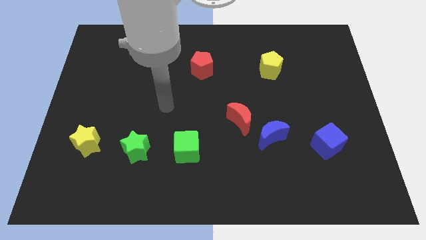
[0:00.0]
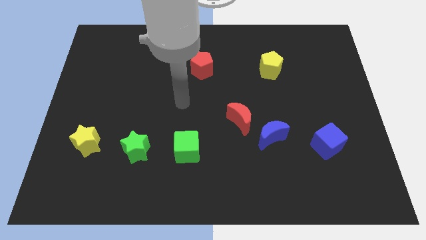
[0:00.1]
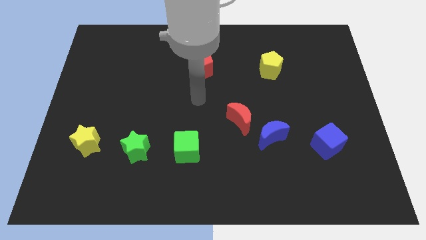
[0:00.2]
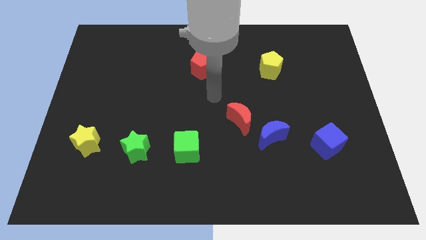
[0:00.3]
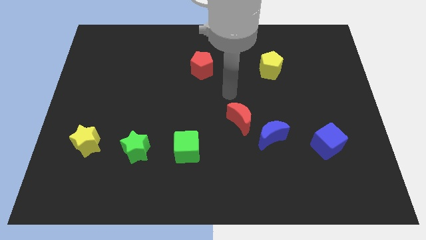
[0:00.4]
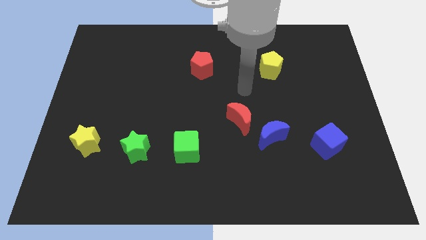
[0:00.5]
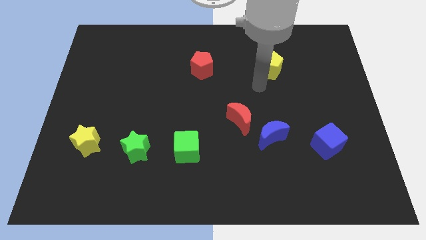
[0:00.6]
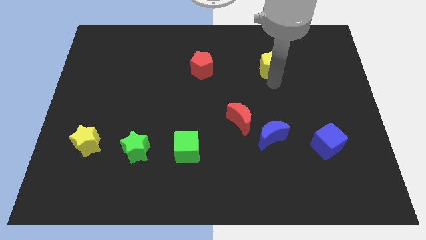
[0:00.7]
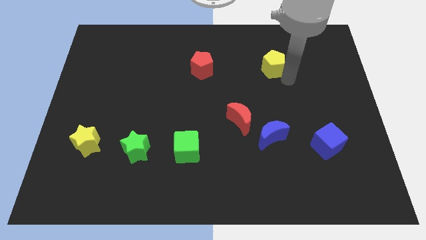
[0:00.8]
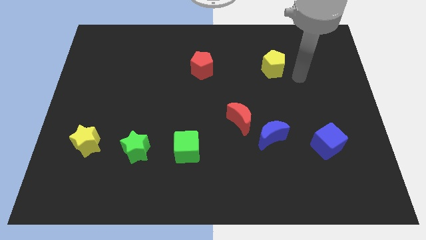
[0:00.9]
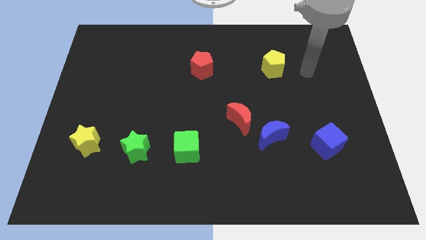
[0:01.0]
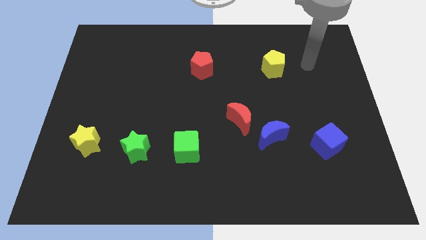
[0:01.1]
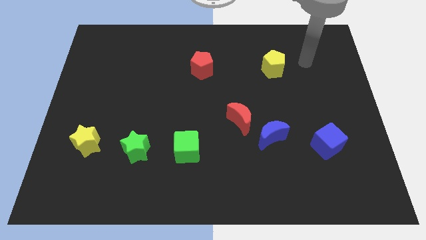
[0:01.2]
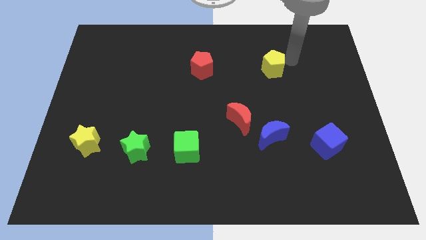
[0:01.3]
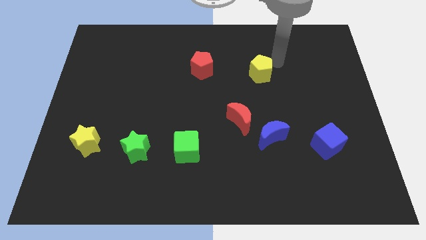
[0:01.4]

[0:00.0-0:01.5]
slightly touch the yellow pentagon

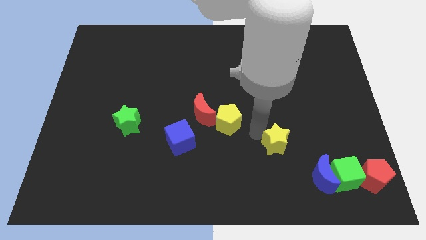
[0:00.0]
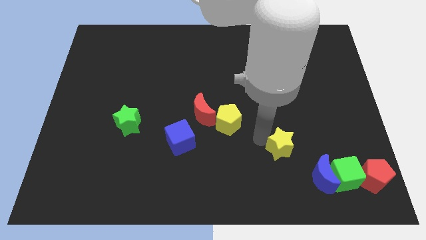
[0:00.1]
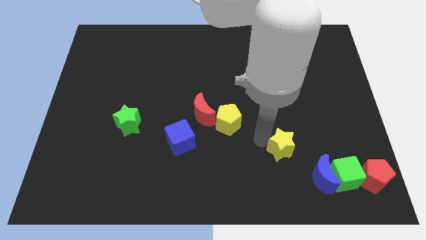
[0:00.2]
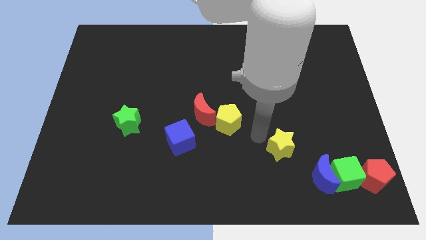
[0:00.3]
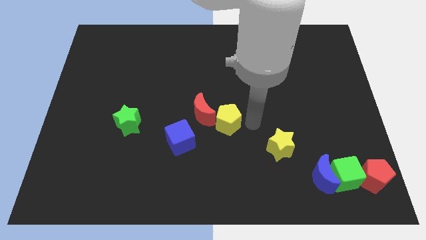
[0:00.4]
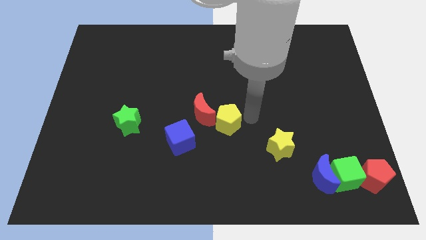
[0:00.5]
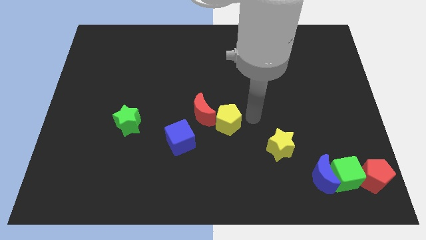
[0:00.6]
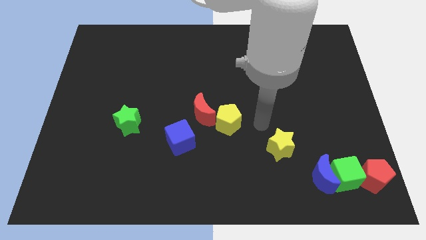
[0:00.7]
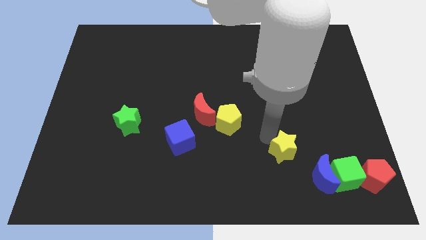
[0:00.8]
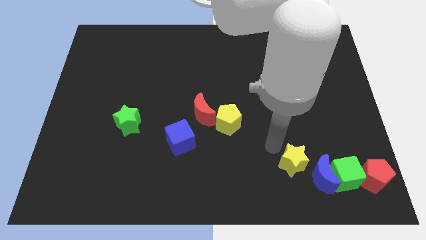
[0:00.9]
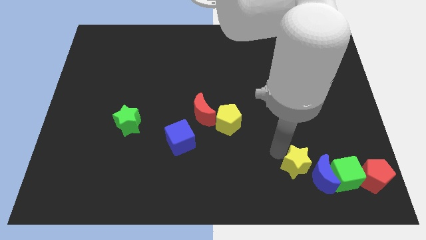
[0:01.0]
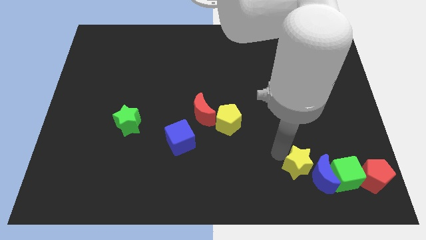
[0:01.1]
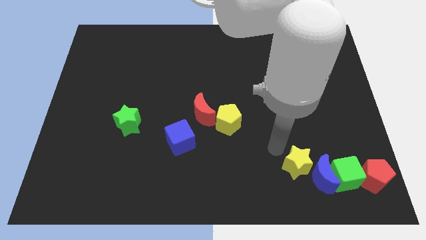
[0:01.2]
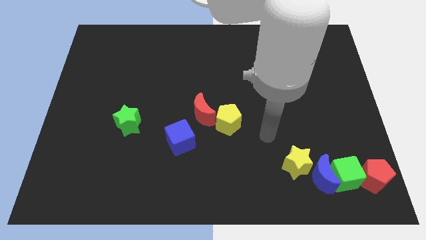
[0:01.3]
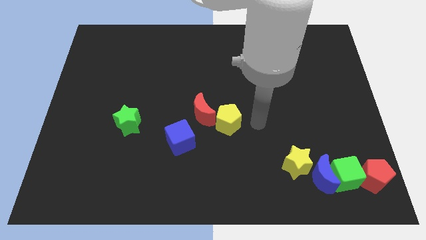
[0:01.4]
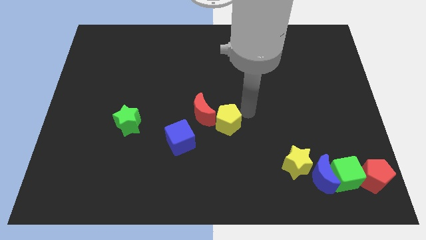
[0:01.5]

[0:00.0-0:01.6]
push the yellow star diagonally top left to blue moon

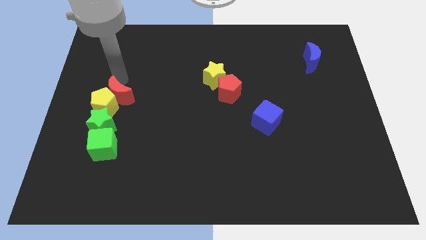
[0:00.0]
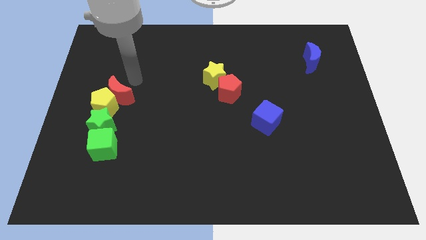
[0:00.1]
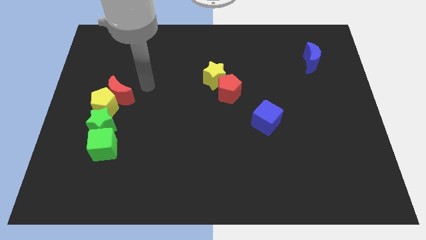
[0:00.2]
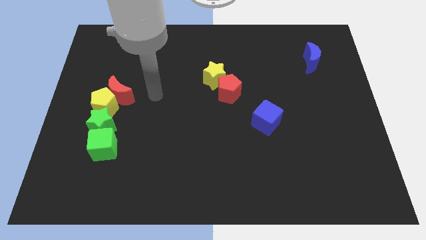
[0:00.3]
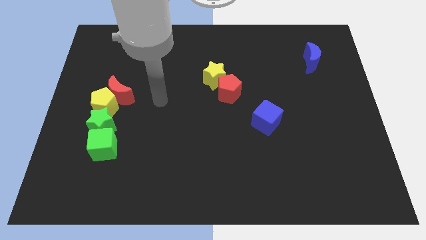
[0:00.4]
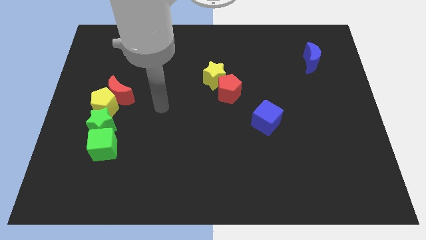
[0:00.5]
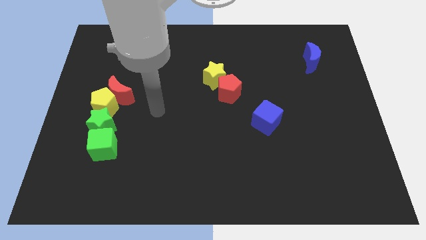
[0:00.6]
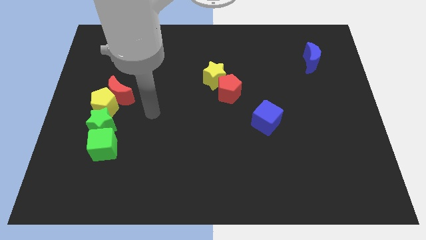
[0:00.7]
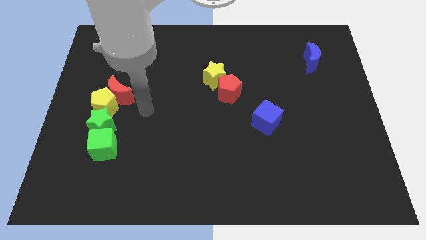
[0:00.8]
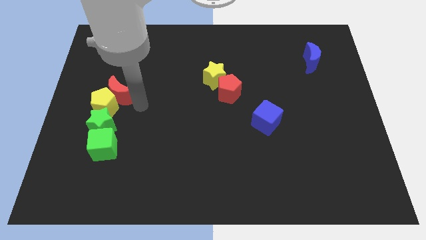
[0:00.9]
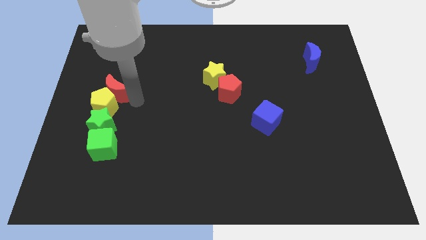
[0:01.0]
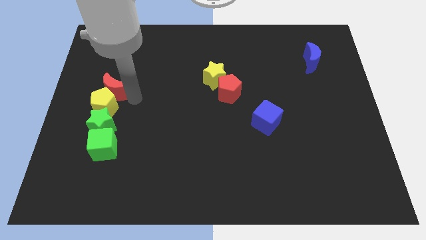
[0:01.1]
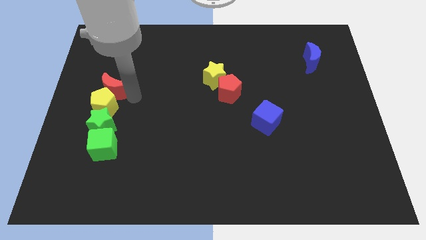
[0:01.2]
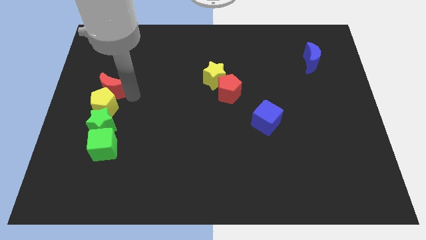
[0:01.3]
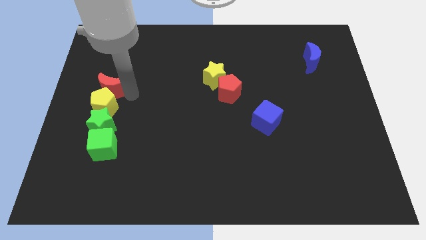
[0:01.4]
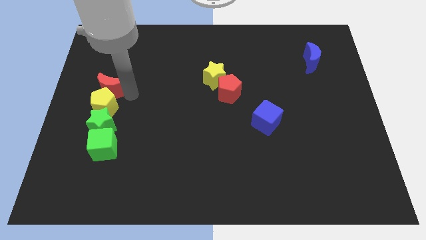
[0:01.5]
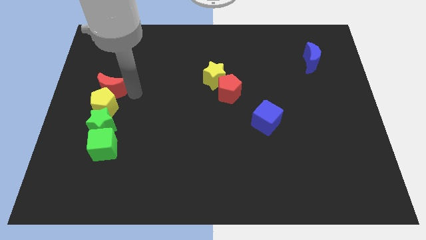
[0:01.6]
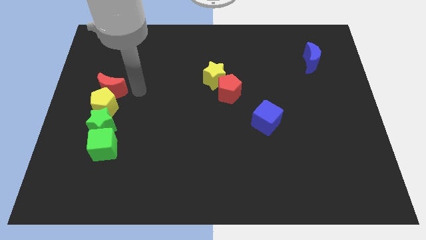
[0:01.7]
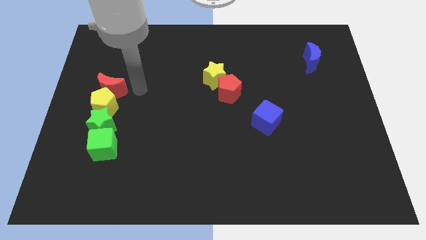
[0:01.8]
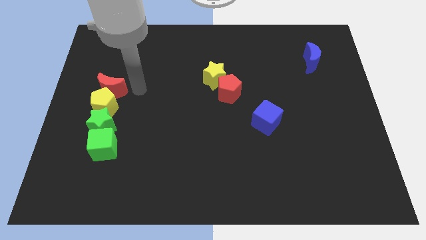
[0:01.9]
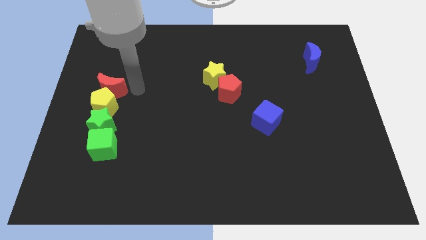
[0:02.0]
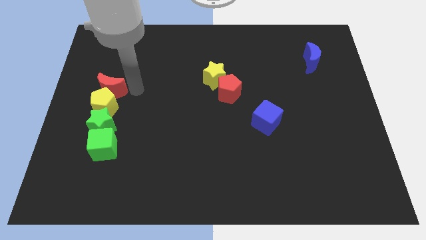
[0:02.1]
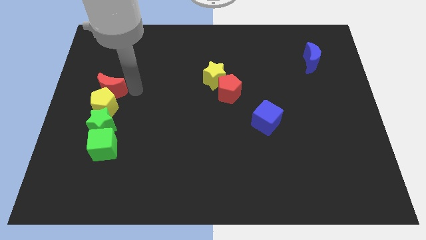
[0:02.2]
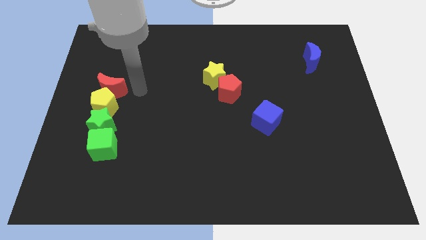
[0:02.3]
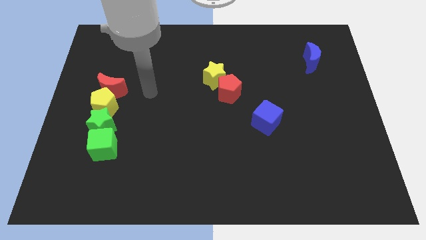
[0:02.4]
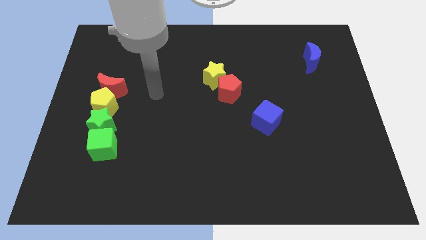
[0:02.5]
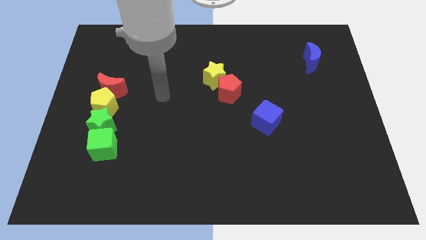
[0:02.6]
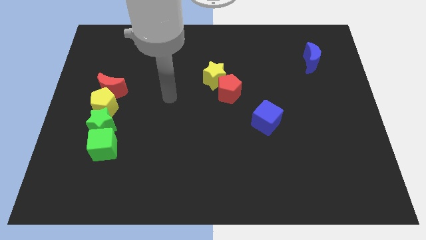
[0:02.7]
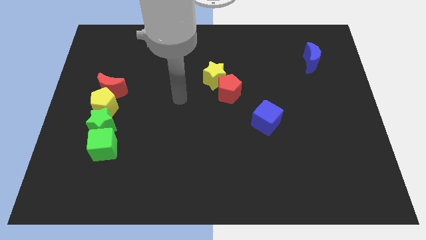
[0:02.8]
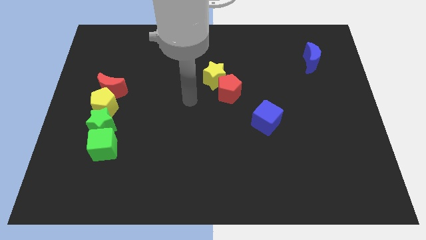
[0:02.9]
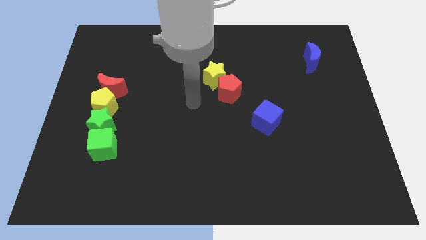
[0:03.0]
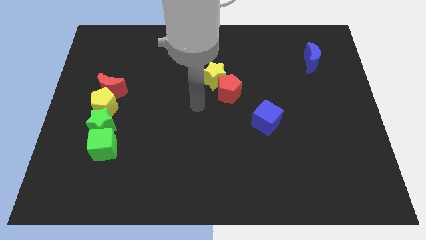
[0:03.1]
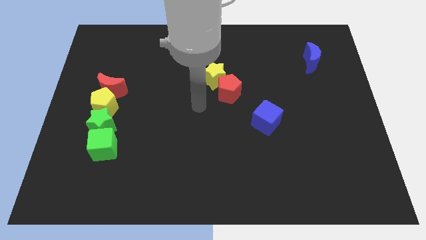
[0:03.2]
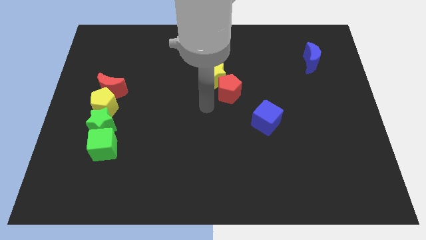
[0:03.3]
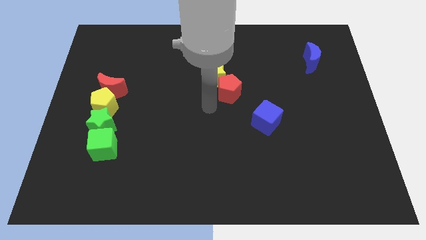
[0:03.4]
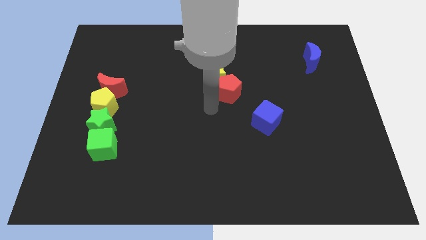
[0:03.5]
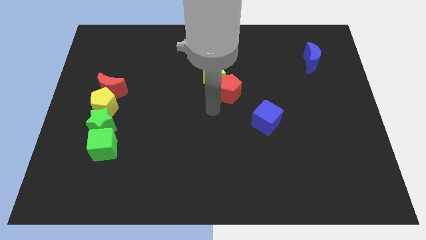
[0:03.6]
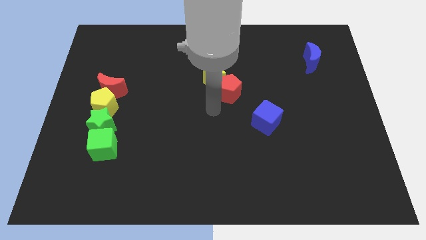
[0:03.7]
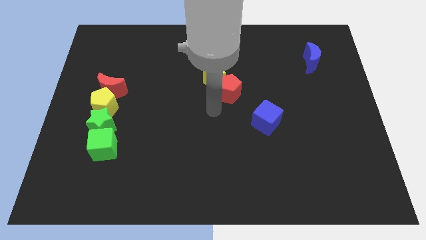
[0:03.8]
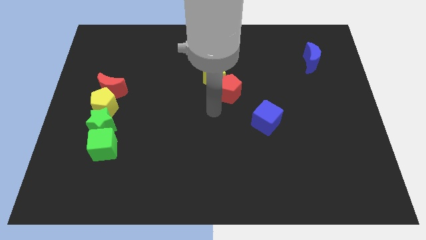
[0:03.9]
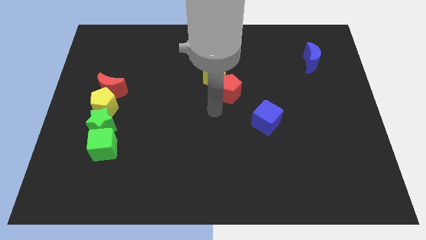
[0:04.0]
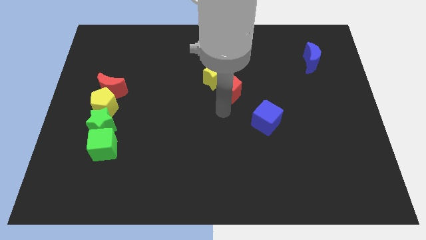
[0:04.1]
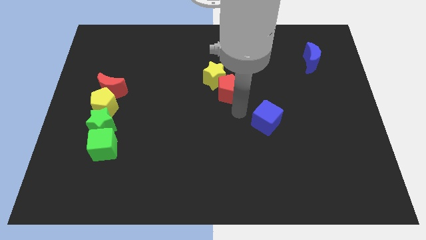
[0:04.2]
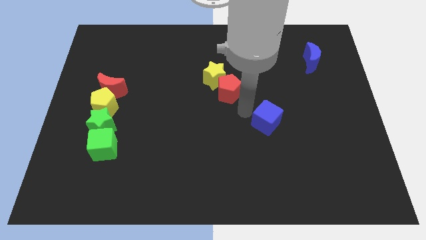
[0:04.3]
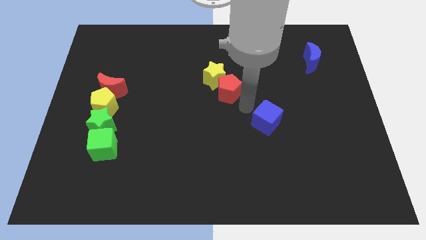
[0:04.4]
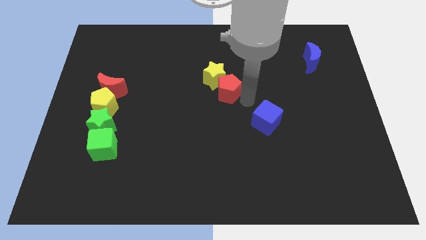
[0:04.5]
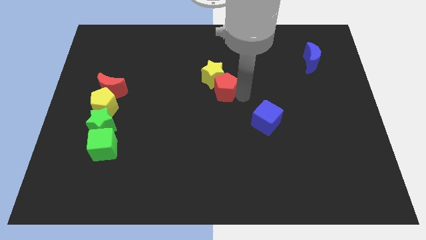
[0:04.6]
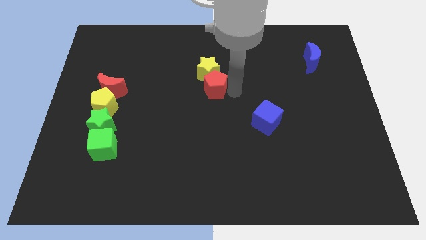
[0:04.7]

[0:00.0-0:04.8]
move your arm away from the red moon

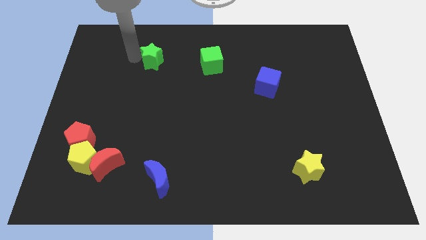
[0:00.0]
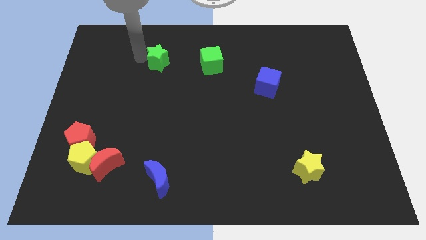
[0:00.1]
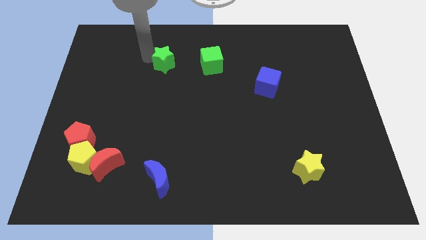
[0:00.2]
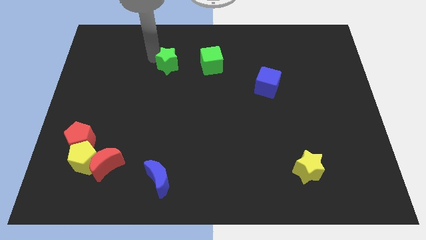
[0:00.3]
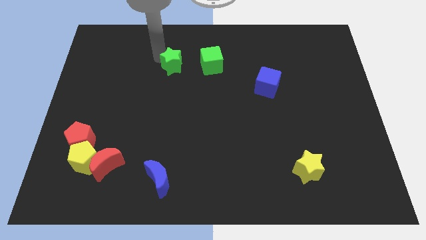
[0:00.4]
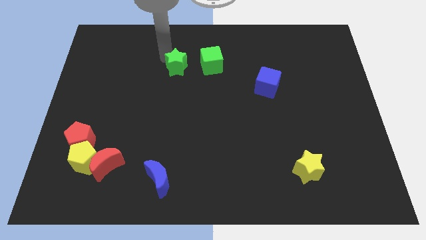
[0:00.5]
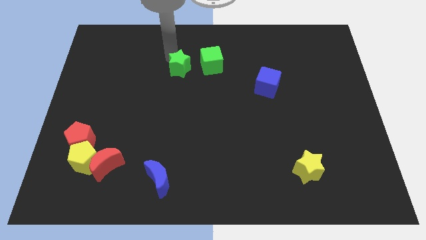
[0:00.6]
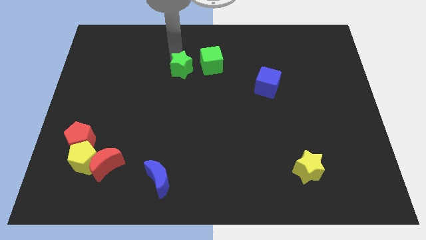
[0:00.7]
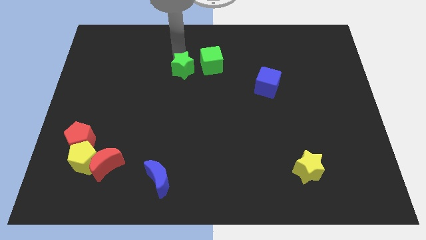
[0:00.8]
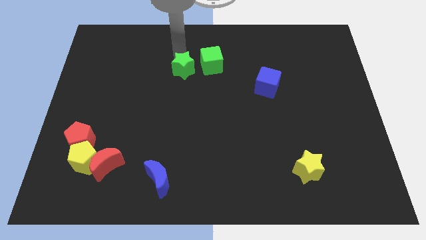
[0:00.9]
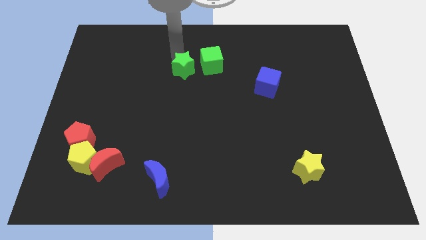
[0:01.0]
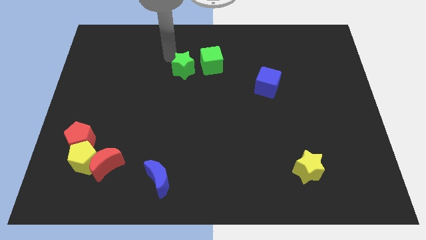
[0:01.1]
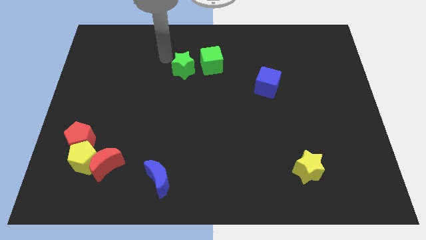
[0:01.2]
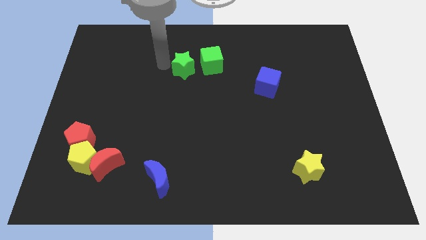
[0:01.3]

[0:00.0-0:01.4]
move green star towards green cube
